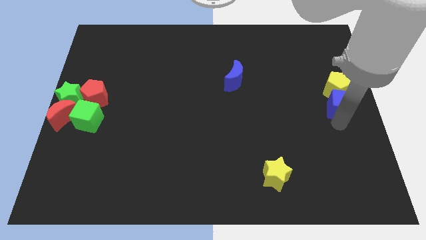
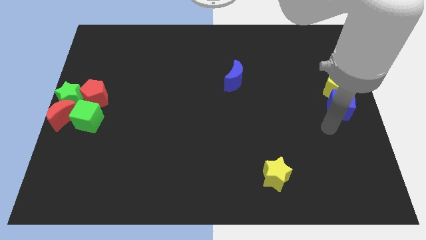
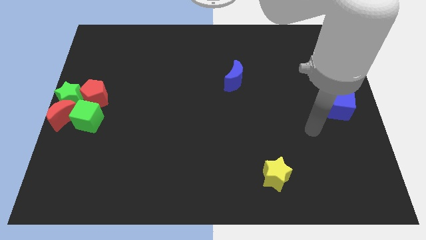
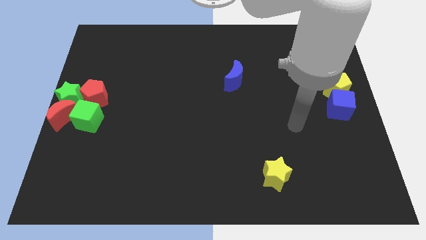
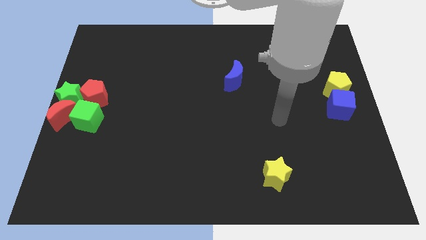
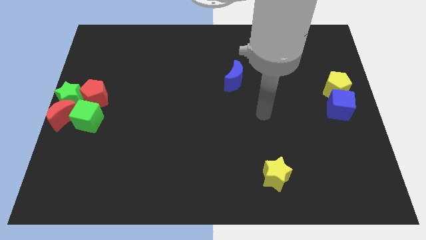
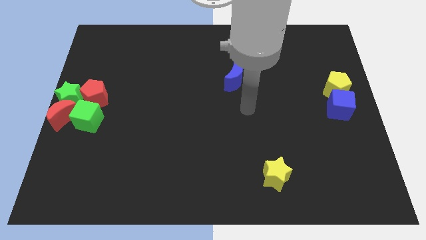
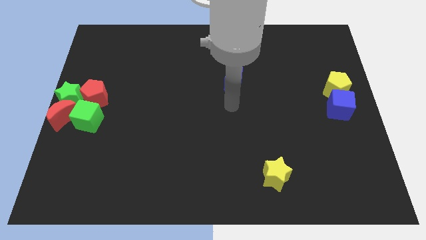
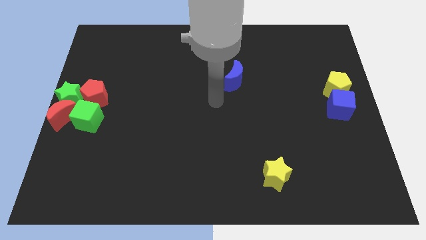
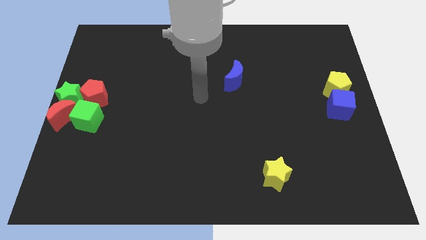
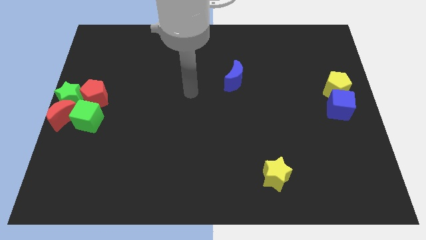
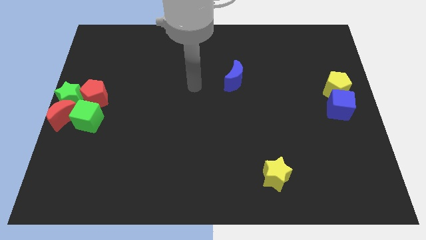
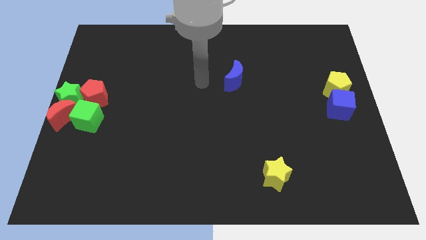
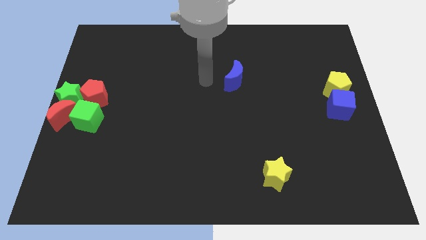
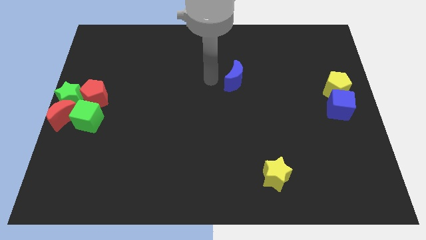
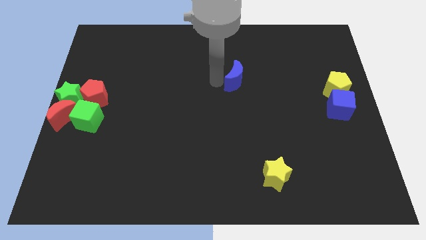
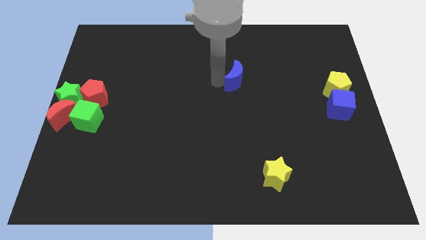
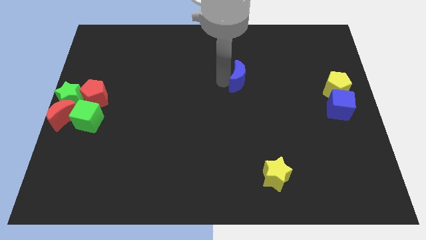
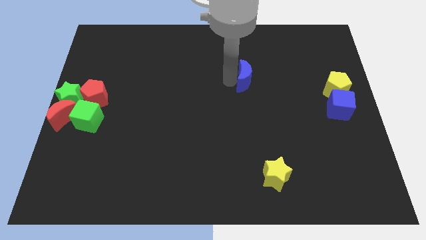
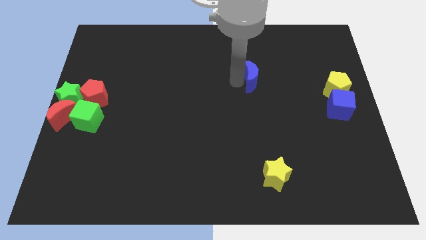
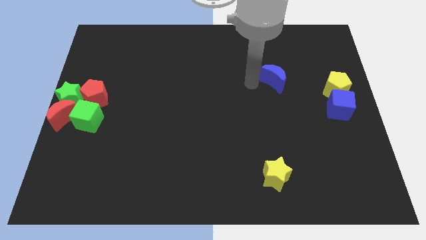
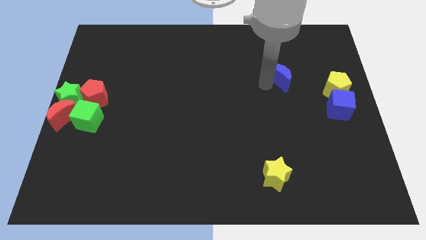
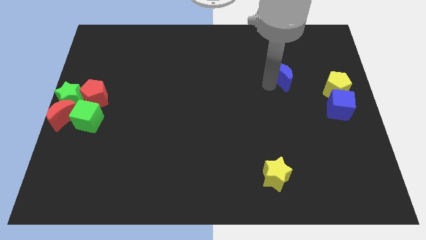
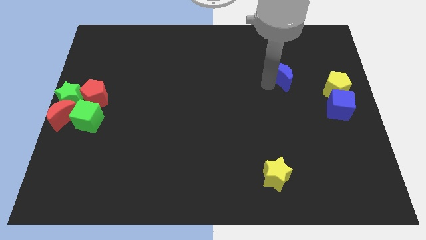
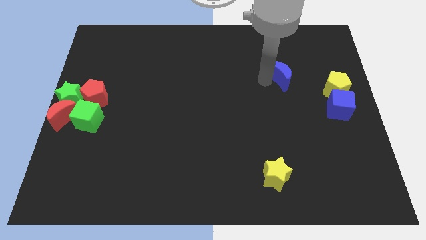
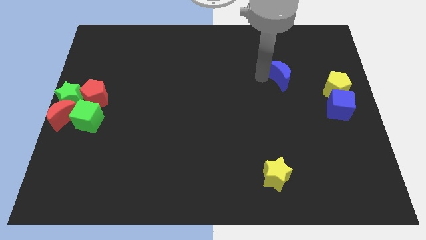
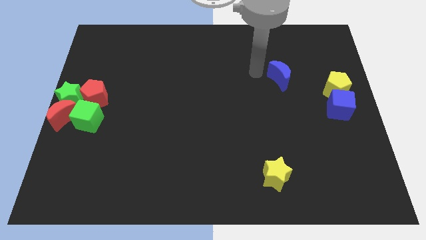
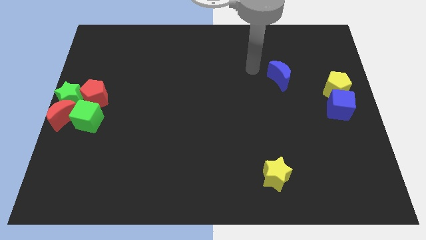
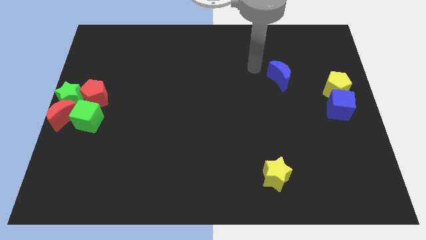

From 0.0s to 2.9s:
move your arm away from the blue cube

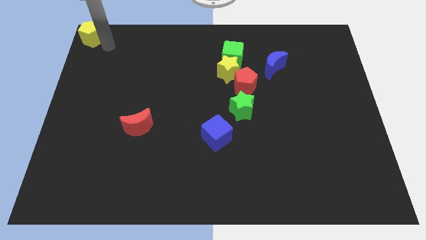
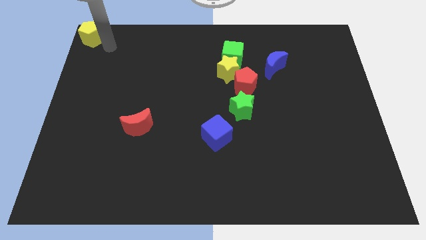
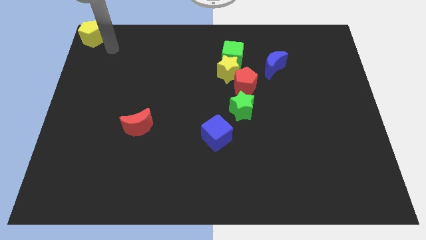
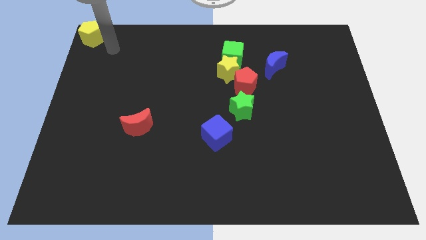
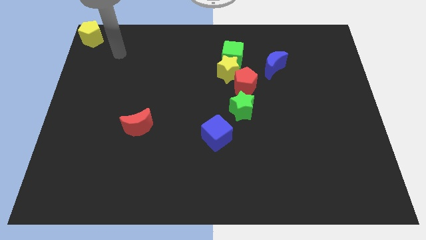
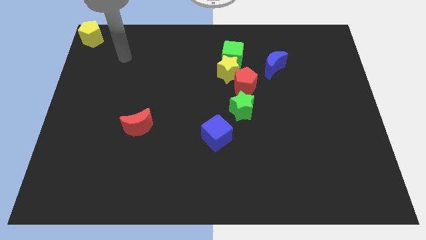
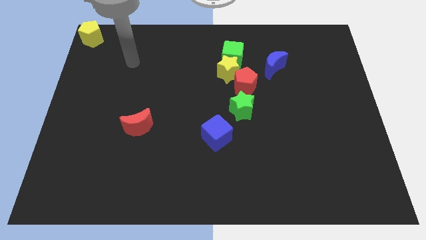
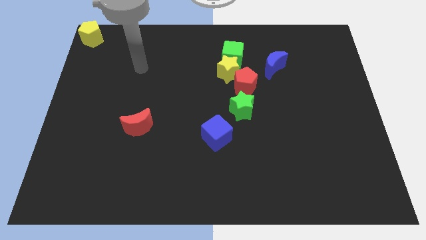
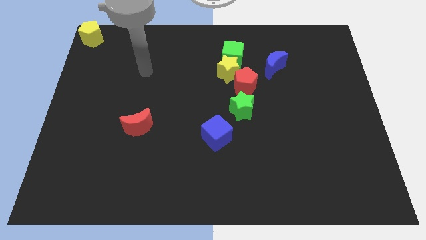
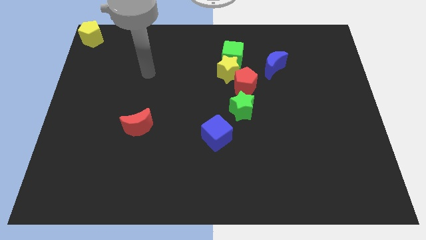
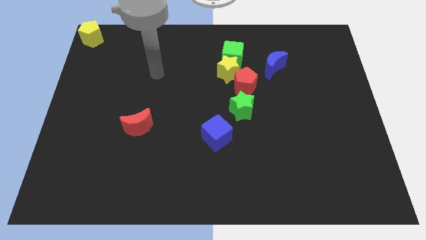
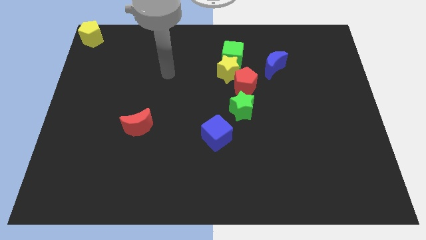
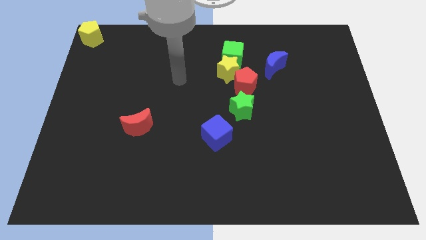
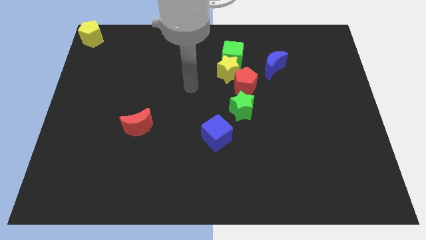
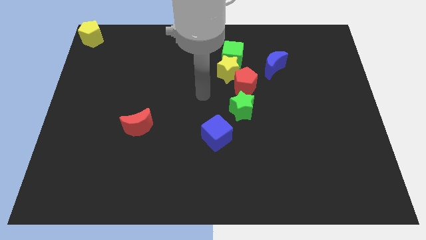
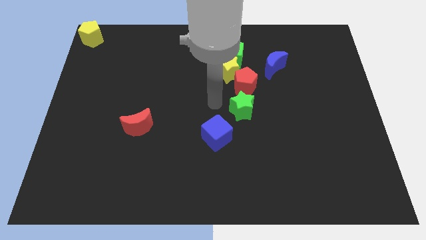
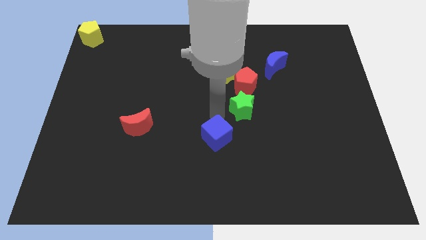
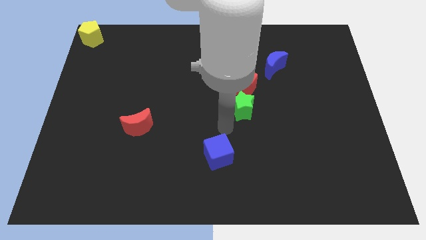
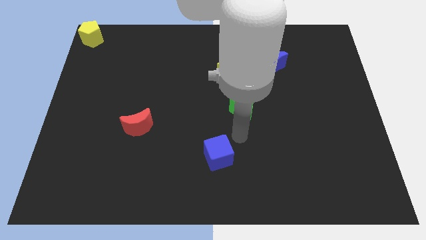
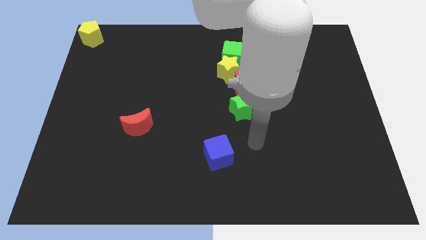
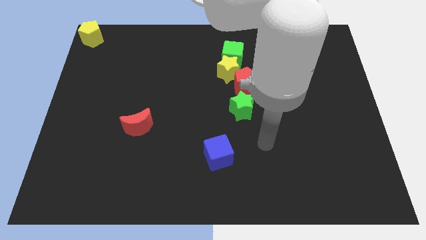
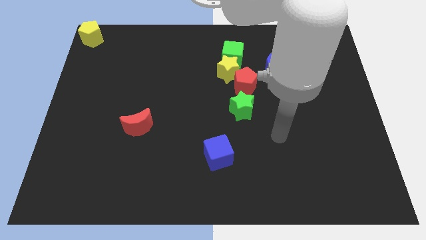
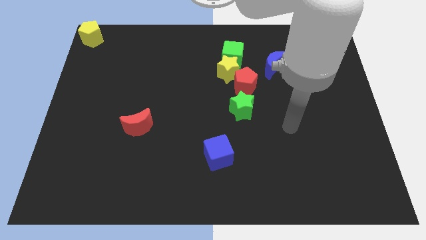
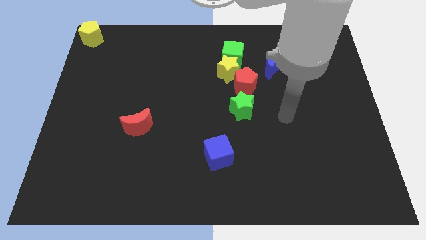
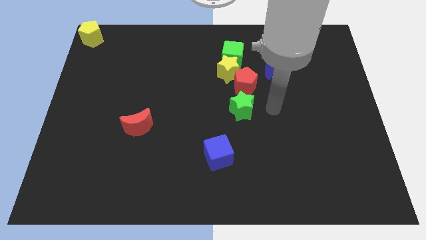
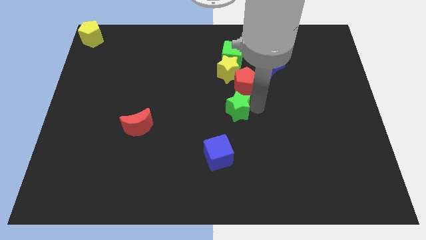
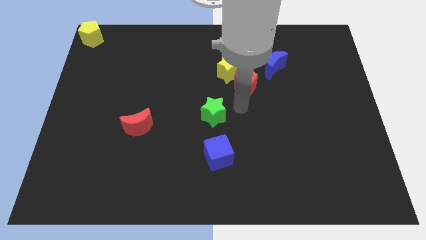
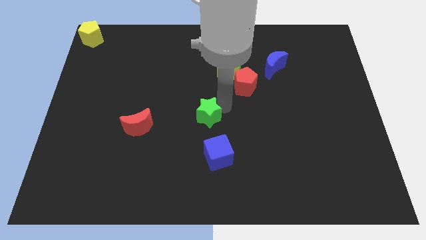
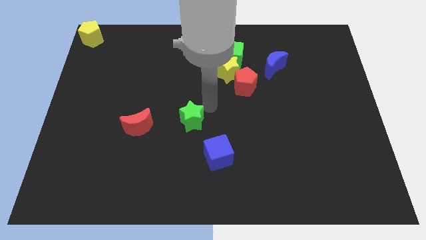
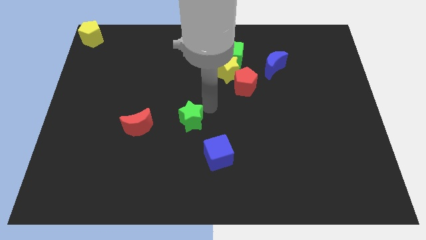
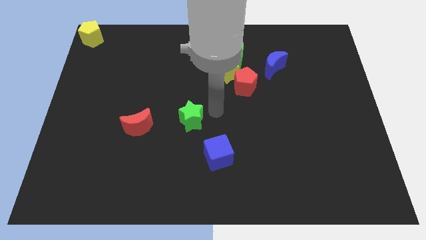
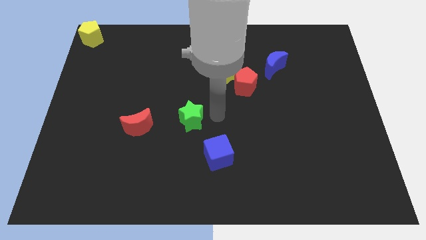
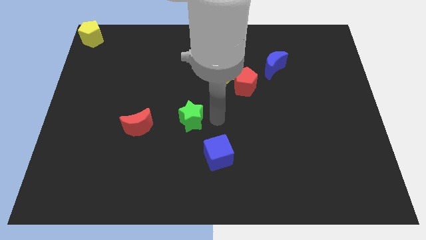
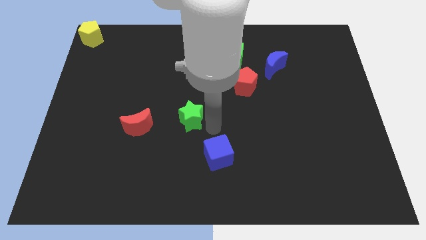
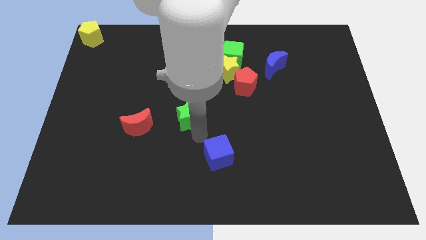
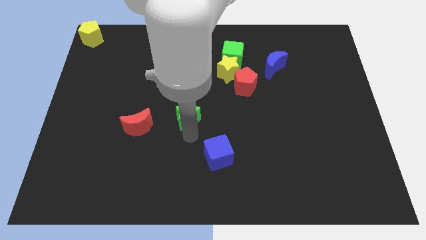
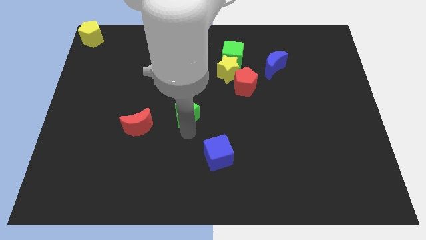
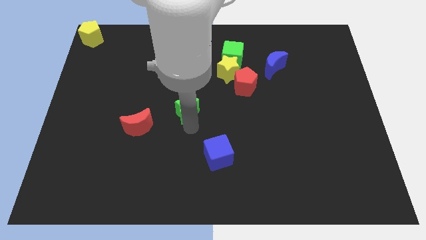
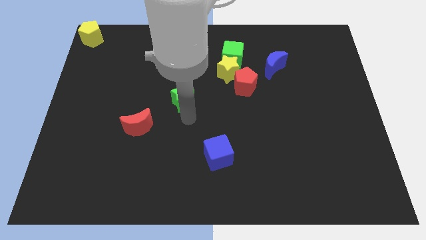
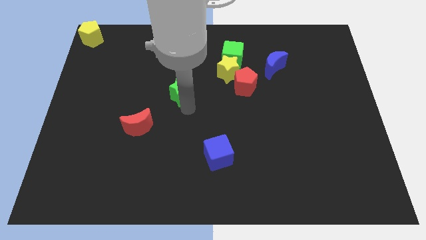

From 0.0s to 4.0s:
push the green star to the center of the board

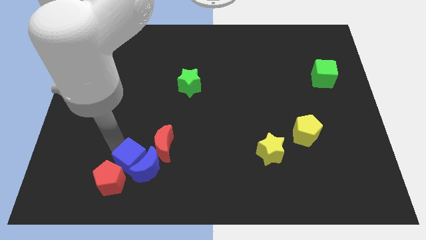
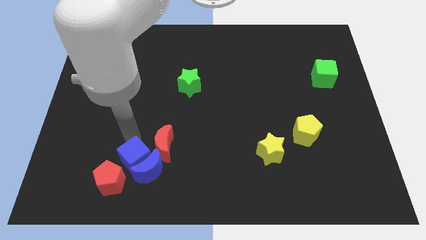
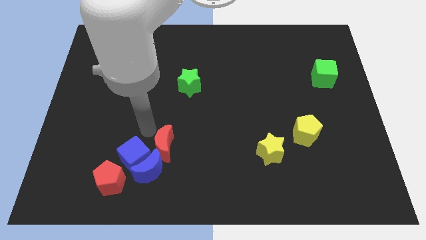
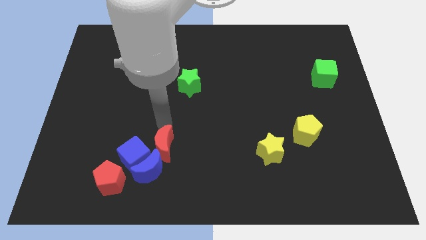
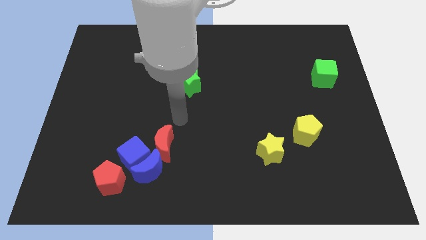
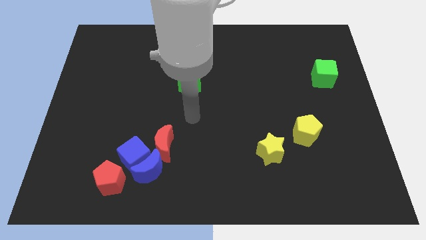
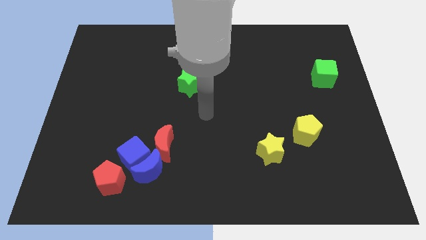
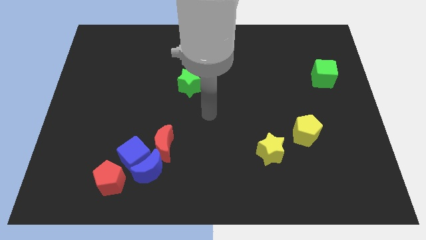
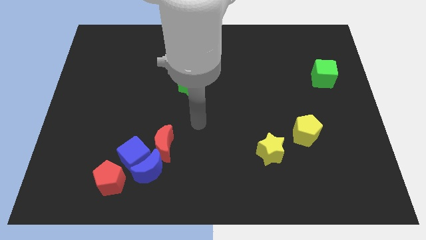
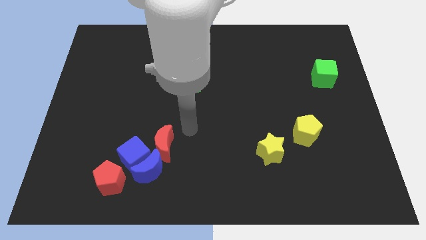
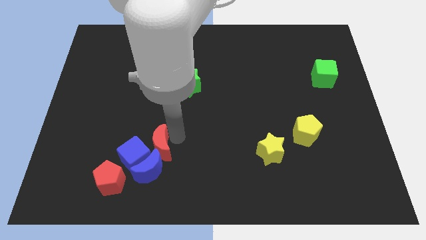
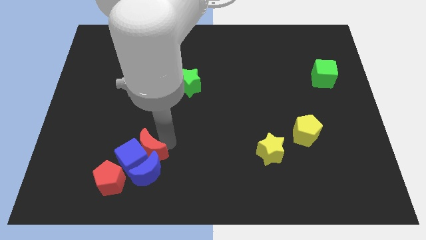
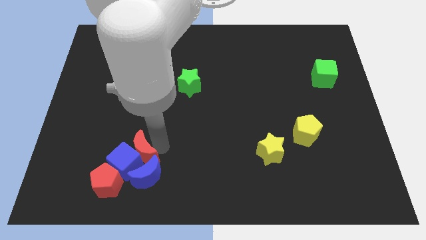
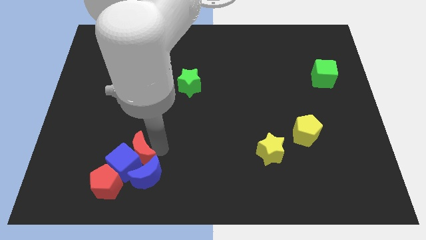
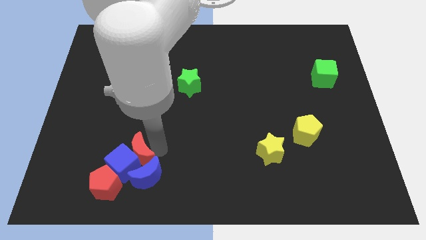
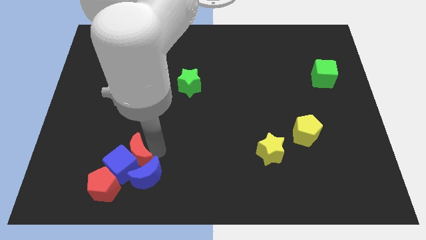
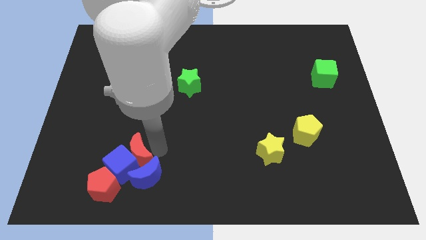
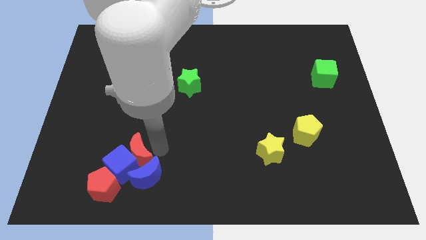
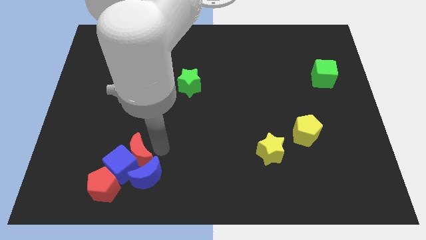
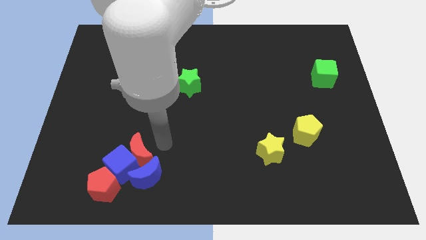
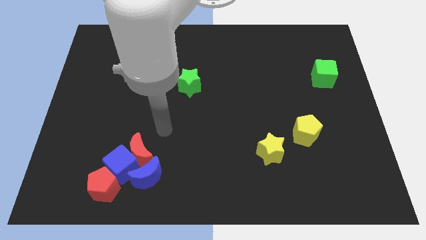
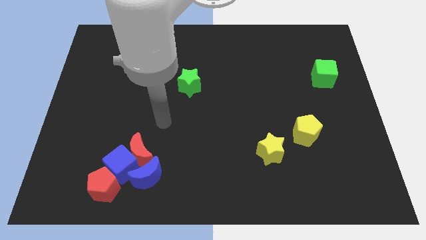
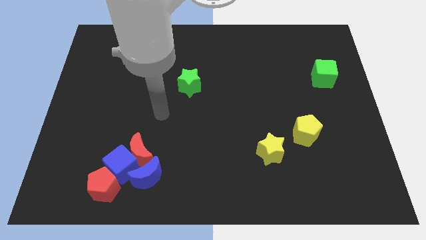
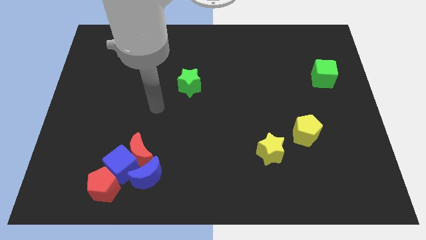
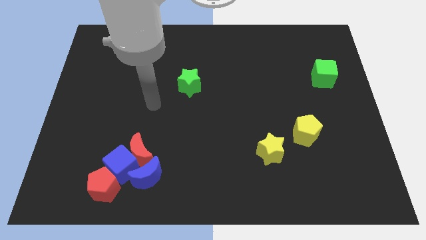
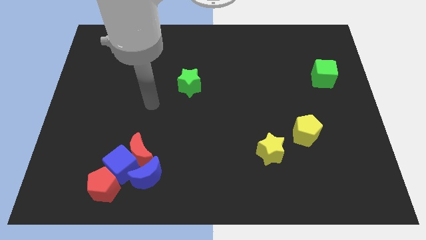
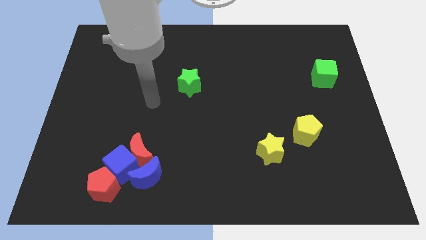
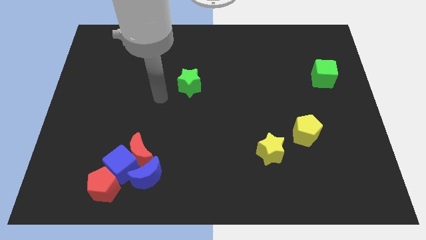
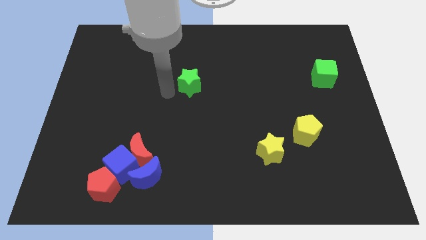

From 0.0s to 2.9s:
move the red moon into the blue cube
